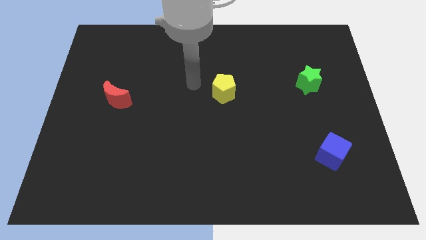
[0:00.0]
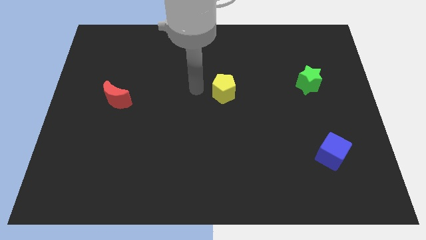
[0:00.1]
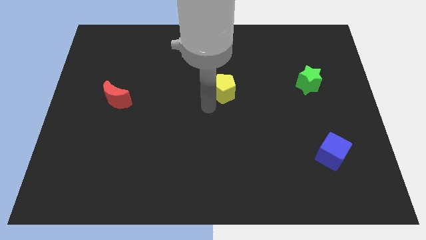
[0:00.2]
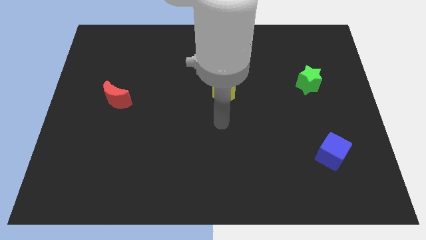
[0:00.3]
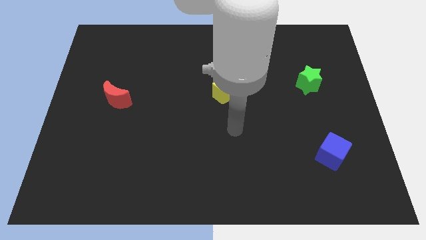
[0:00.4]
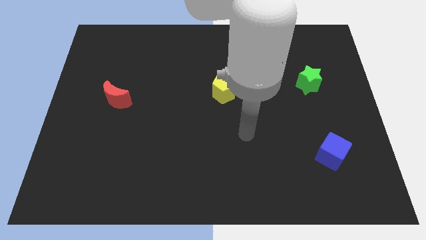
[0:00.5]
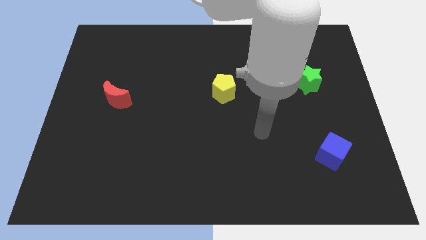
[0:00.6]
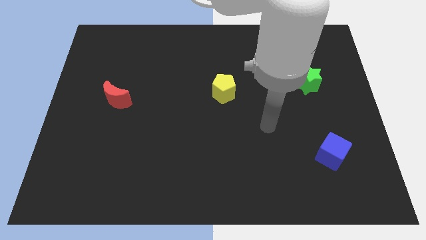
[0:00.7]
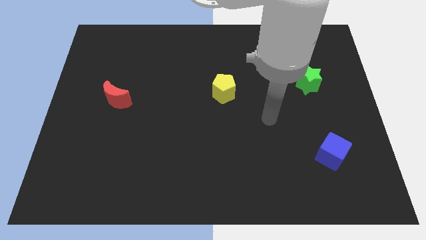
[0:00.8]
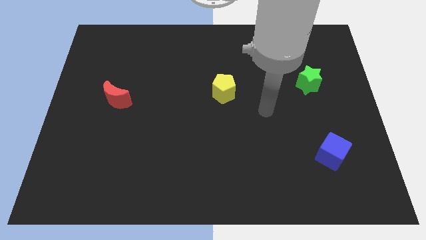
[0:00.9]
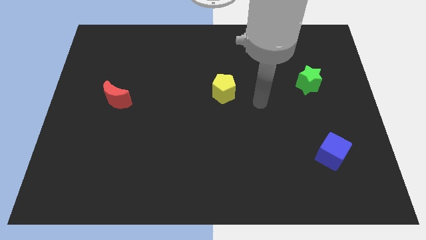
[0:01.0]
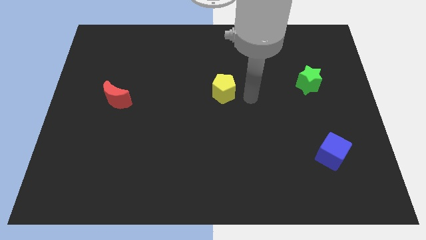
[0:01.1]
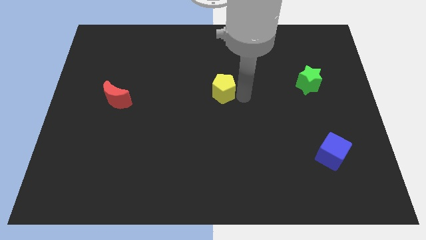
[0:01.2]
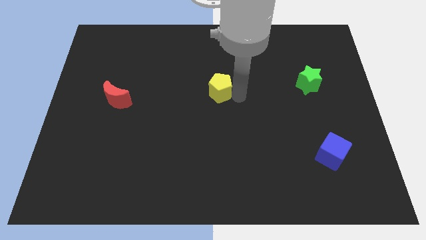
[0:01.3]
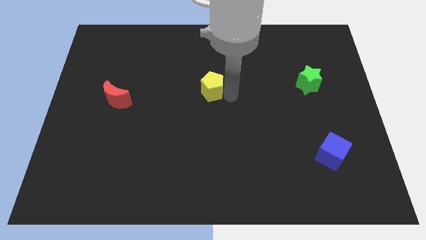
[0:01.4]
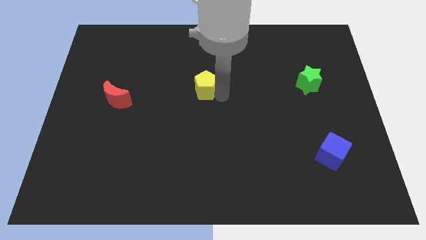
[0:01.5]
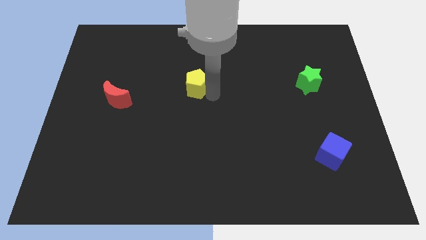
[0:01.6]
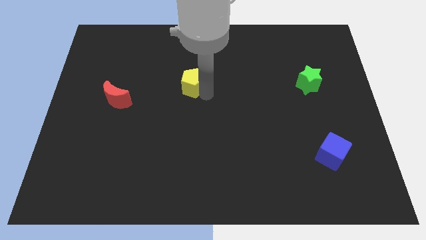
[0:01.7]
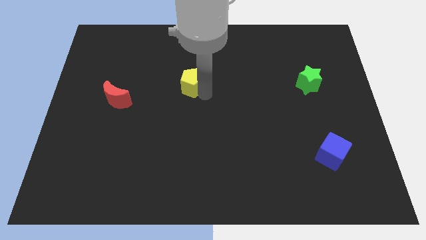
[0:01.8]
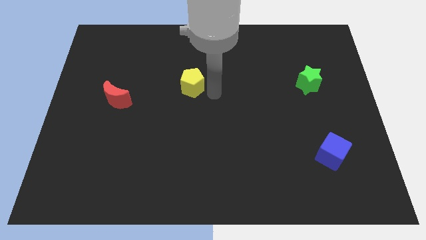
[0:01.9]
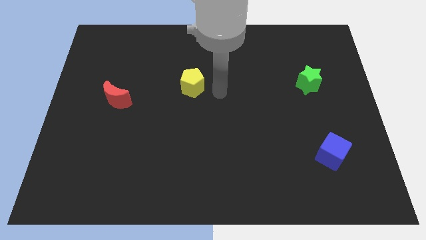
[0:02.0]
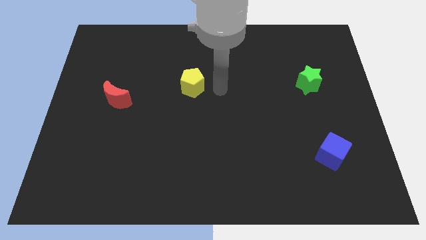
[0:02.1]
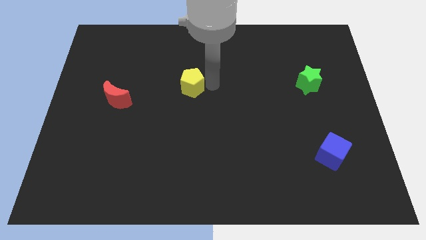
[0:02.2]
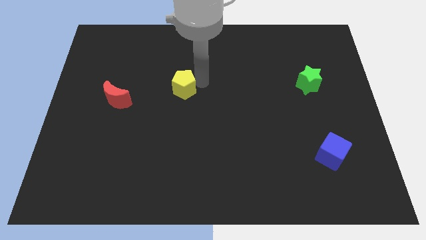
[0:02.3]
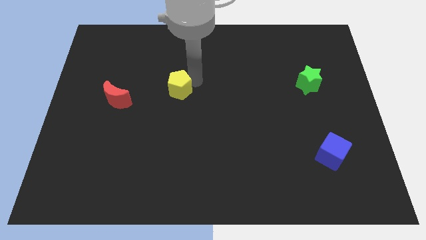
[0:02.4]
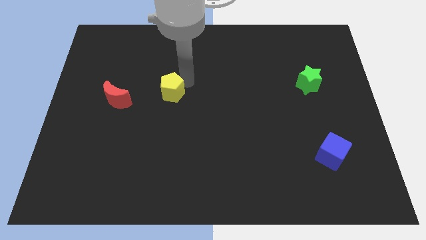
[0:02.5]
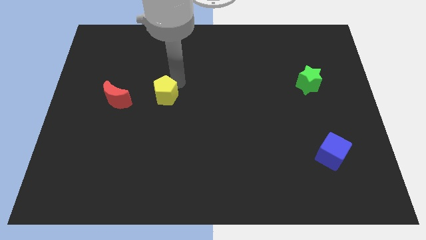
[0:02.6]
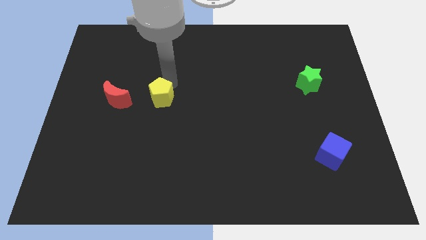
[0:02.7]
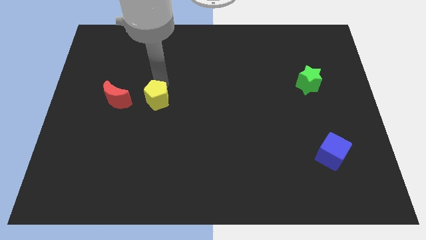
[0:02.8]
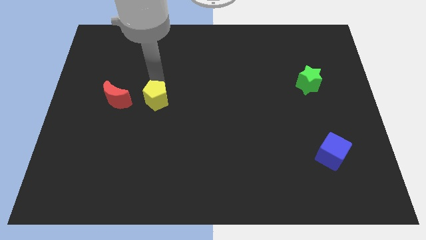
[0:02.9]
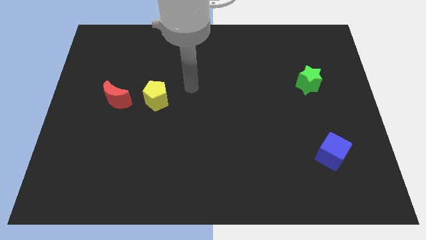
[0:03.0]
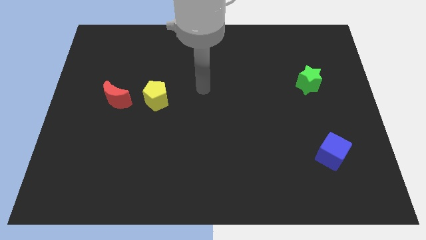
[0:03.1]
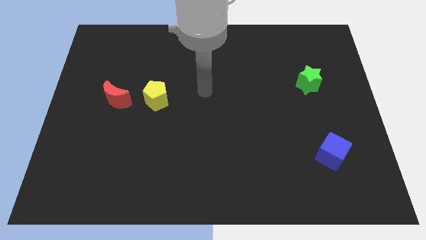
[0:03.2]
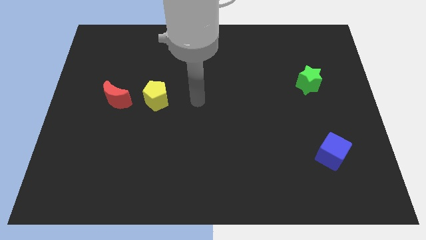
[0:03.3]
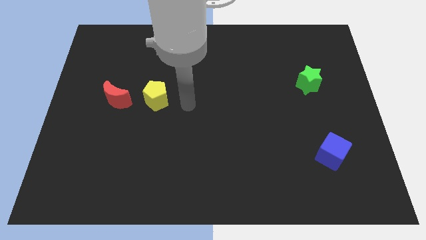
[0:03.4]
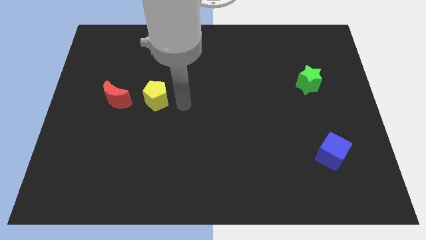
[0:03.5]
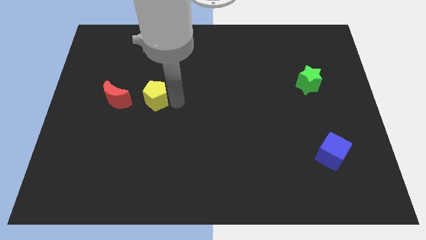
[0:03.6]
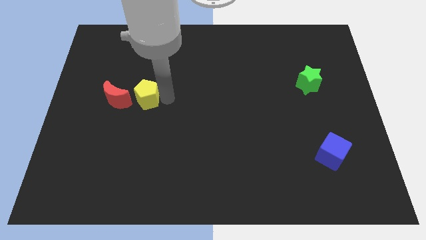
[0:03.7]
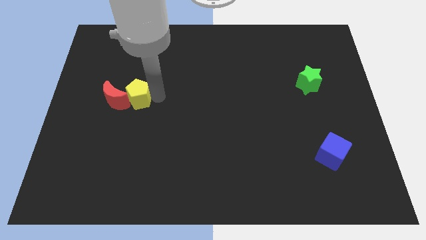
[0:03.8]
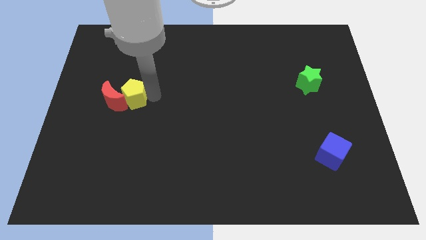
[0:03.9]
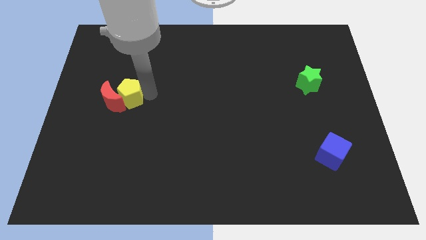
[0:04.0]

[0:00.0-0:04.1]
slide the pentagon close to the red block

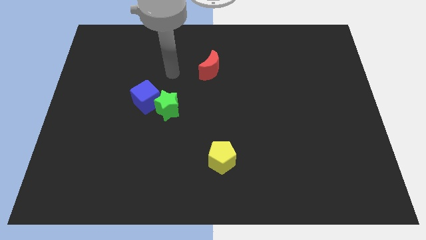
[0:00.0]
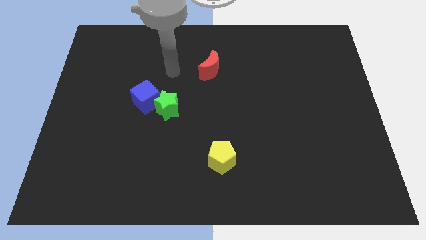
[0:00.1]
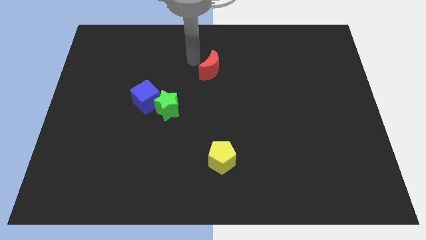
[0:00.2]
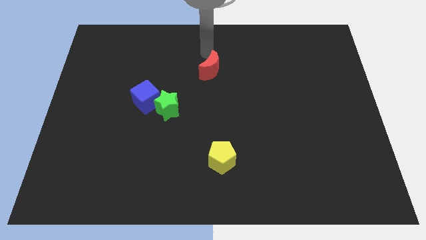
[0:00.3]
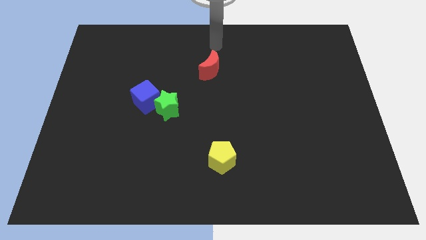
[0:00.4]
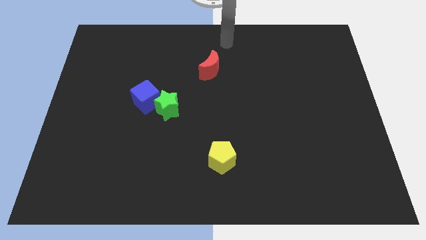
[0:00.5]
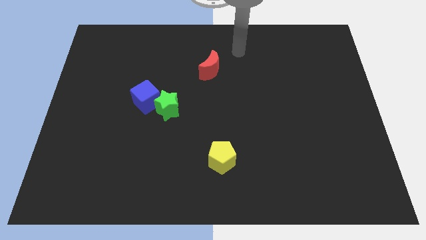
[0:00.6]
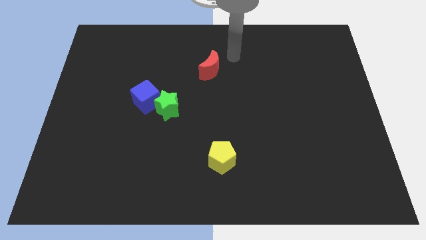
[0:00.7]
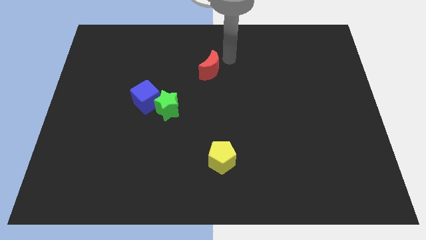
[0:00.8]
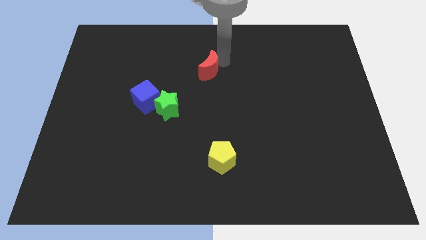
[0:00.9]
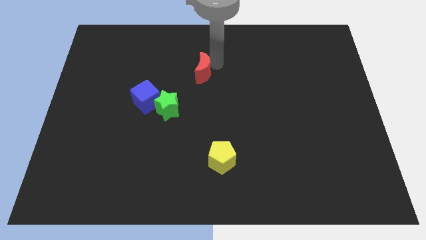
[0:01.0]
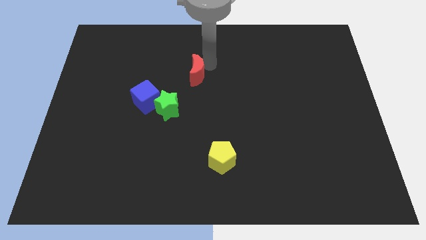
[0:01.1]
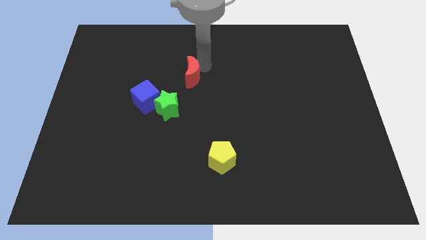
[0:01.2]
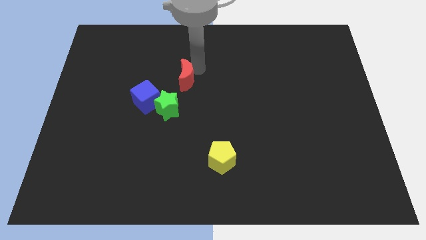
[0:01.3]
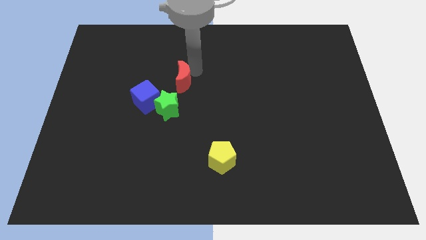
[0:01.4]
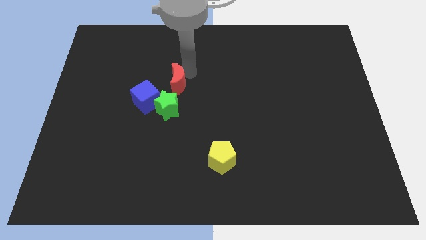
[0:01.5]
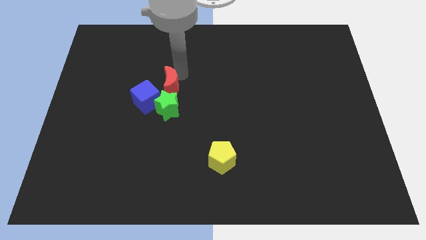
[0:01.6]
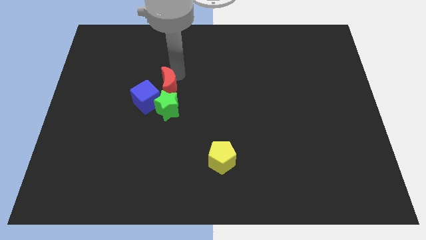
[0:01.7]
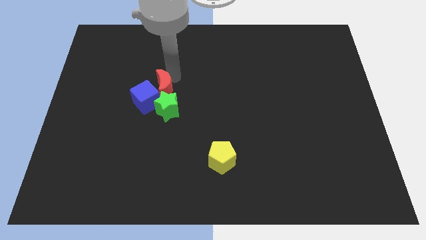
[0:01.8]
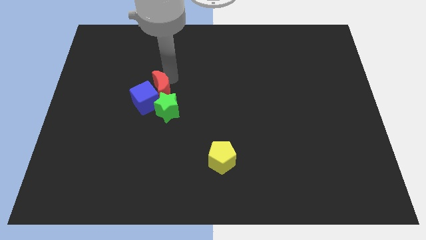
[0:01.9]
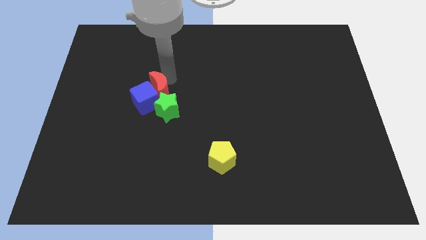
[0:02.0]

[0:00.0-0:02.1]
move the red block close to the blue block

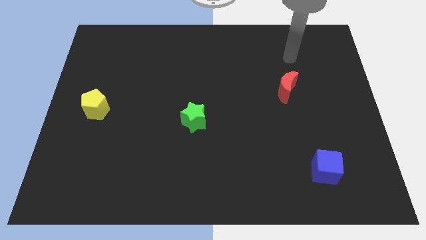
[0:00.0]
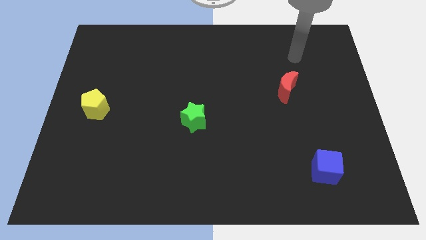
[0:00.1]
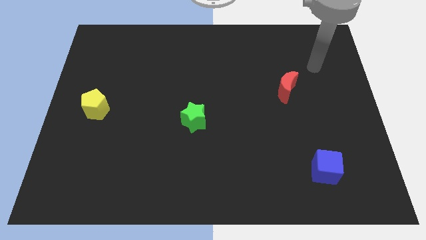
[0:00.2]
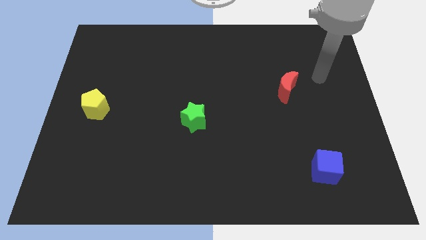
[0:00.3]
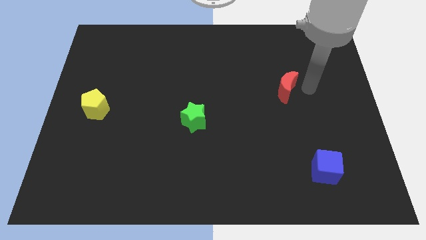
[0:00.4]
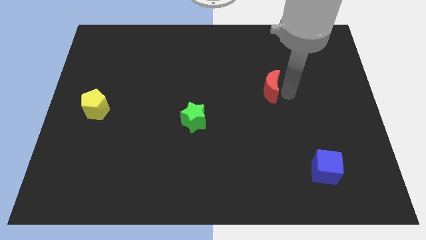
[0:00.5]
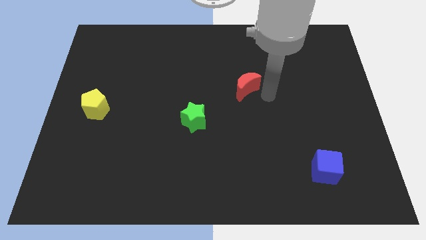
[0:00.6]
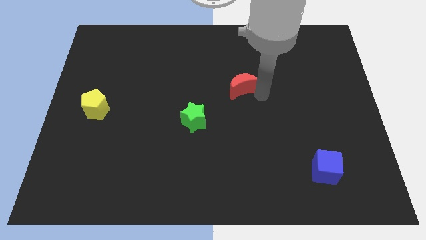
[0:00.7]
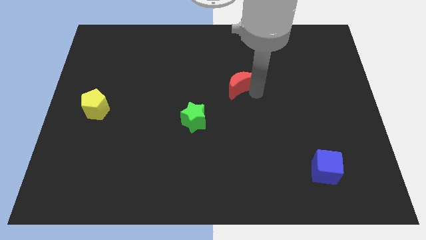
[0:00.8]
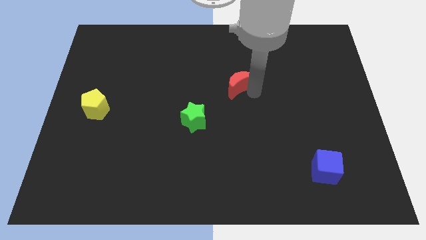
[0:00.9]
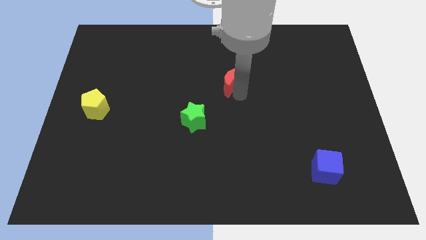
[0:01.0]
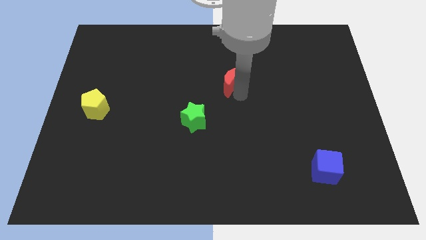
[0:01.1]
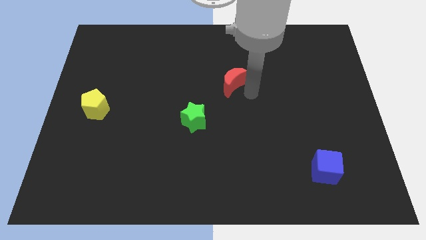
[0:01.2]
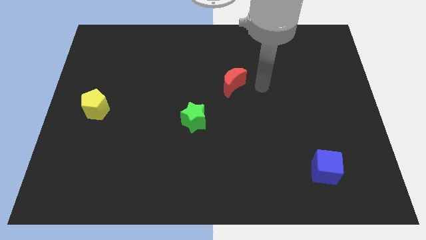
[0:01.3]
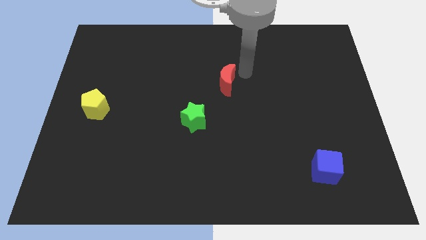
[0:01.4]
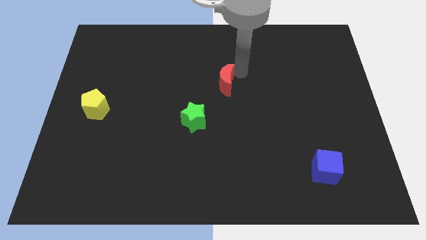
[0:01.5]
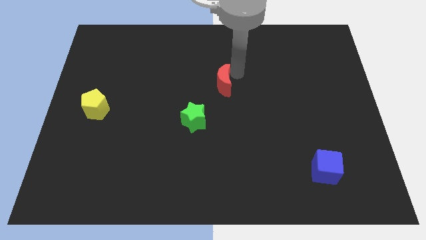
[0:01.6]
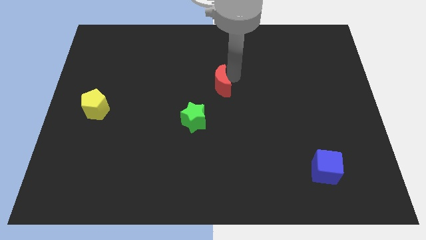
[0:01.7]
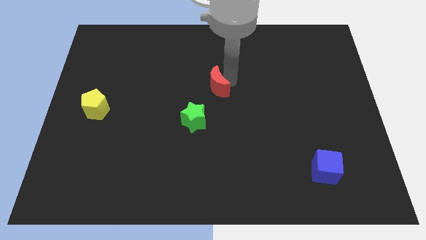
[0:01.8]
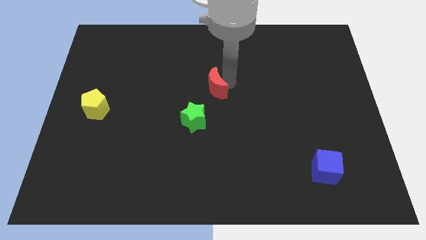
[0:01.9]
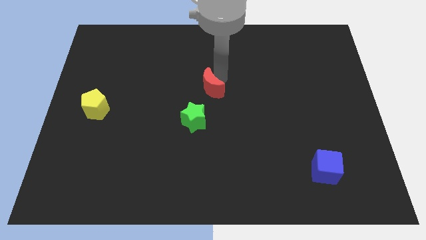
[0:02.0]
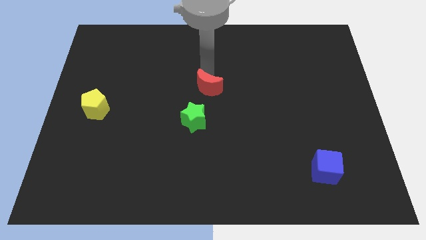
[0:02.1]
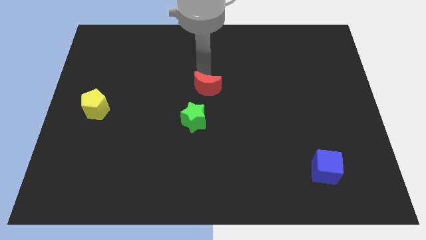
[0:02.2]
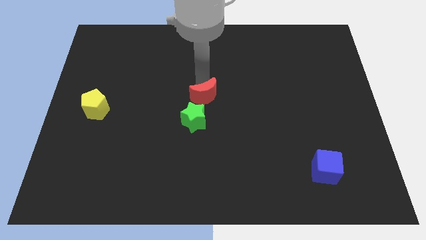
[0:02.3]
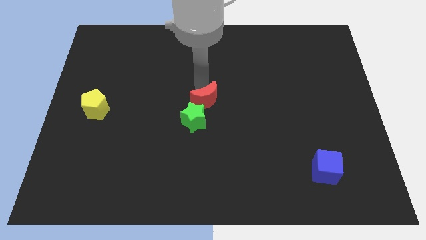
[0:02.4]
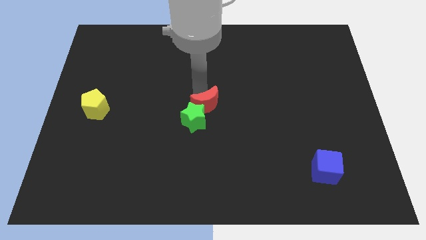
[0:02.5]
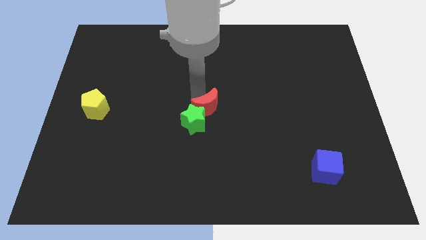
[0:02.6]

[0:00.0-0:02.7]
slide the red moon next to the green star
